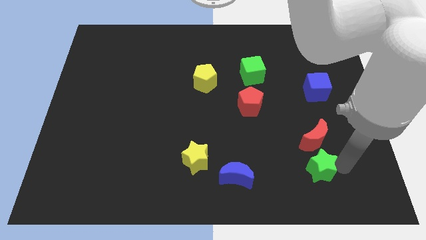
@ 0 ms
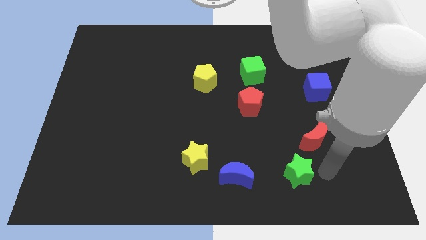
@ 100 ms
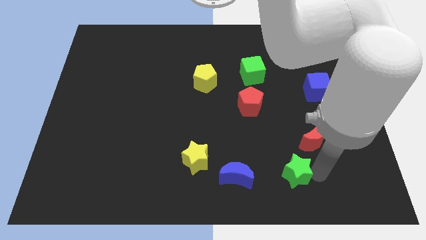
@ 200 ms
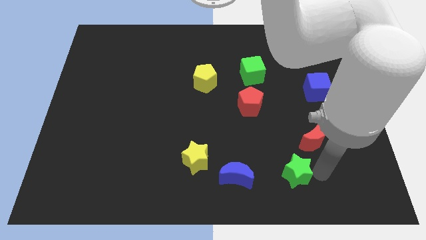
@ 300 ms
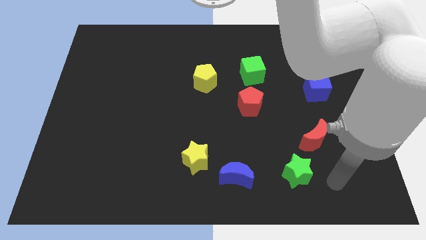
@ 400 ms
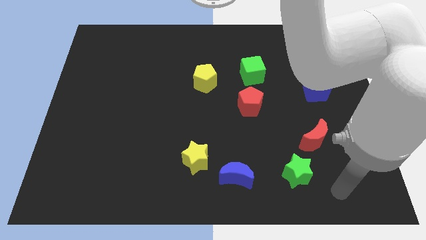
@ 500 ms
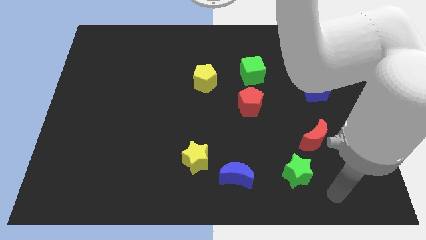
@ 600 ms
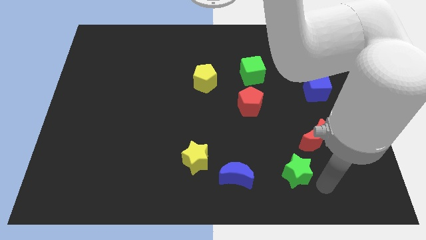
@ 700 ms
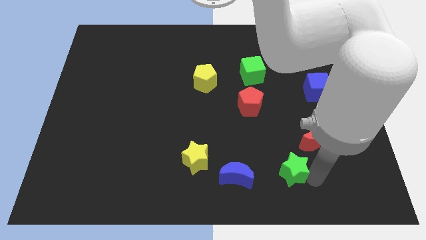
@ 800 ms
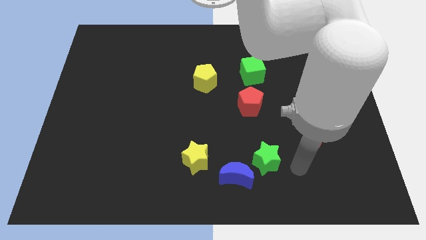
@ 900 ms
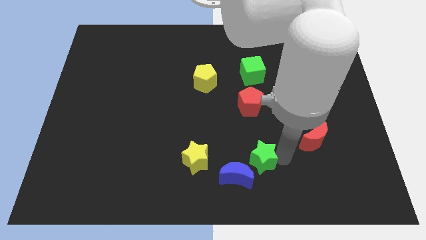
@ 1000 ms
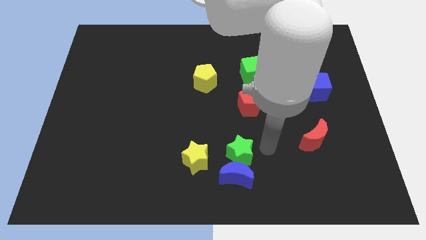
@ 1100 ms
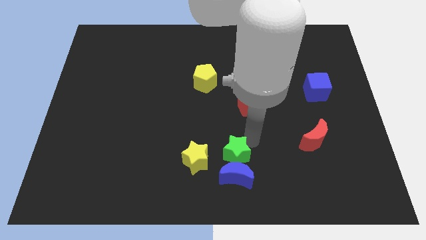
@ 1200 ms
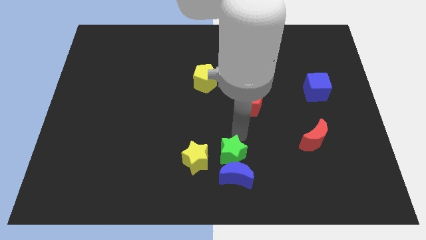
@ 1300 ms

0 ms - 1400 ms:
place the green star above the blue crescent

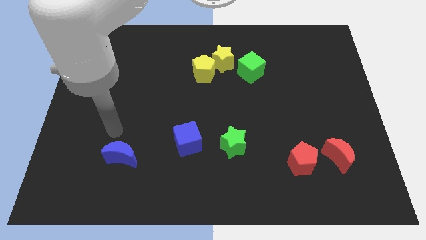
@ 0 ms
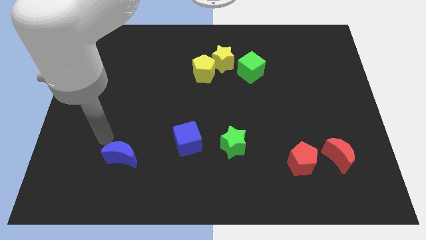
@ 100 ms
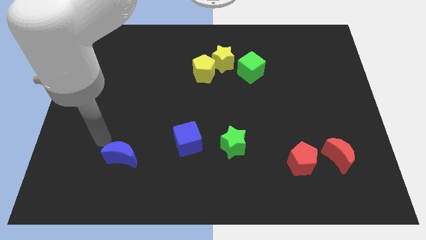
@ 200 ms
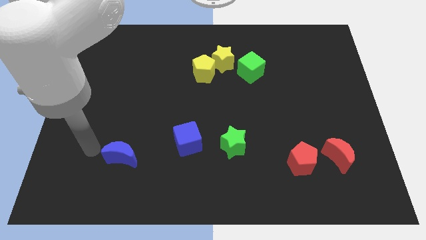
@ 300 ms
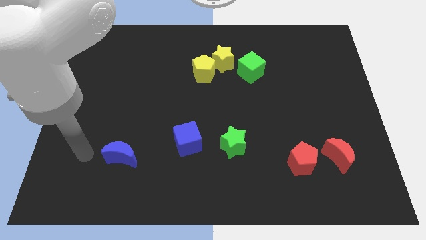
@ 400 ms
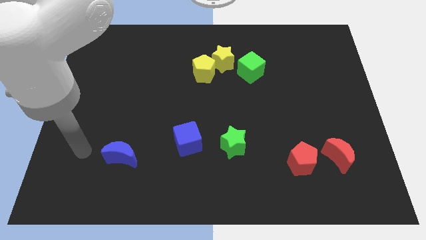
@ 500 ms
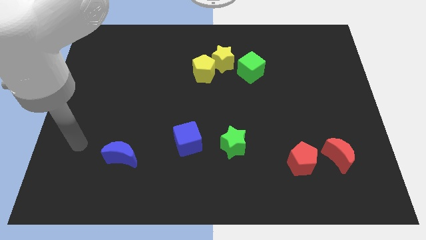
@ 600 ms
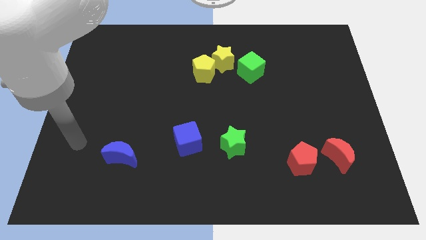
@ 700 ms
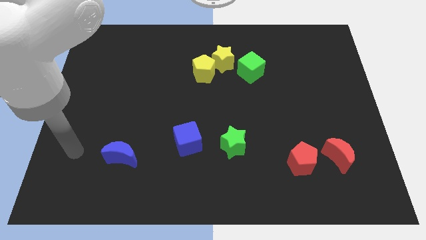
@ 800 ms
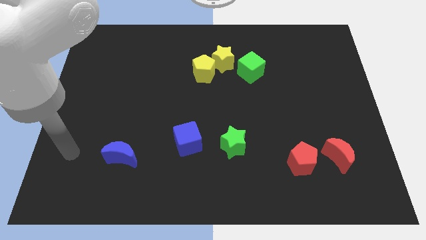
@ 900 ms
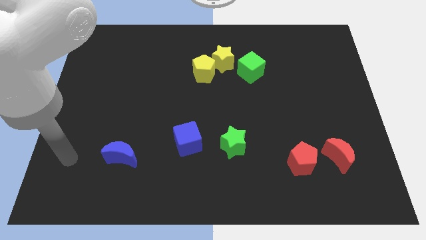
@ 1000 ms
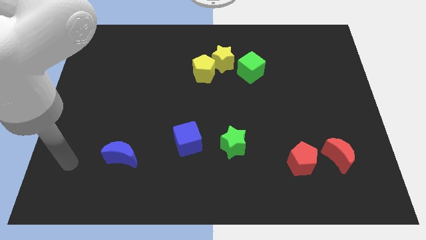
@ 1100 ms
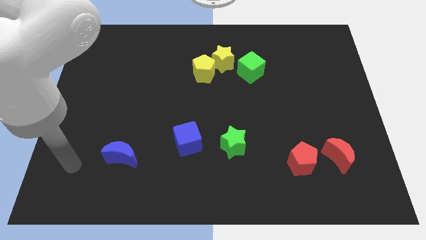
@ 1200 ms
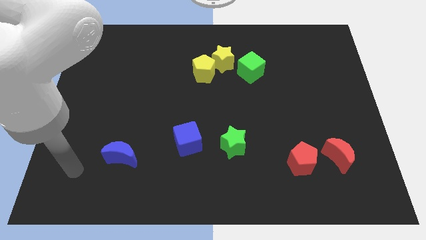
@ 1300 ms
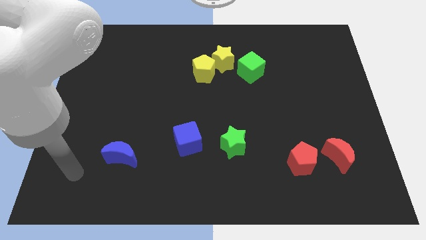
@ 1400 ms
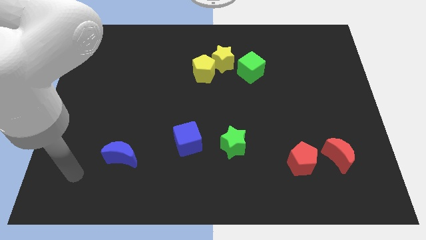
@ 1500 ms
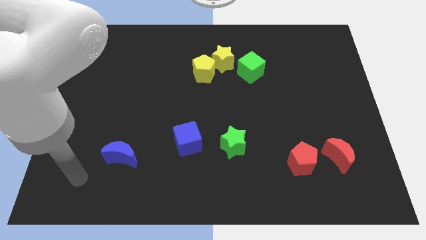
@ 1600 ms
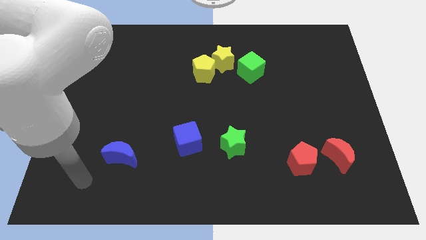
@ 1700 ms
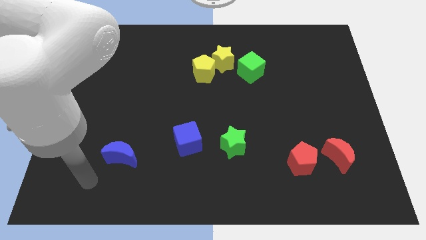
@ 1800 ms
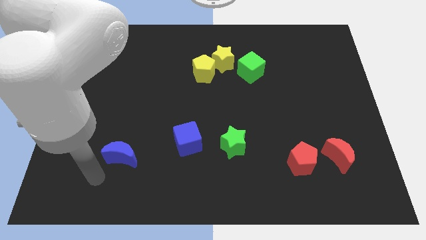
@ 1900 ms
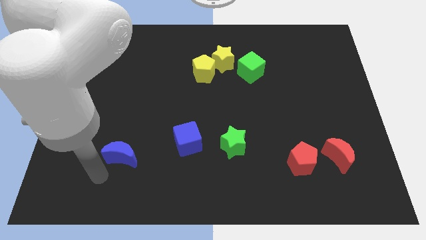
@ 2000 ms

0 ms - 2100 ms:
move your arm to the bottom of the blue crescent

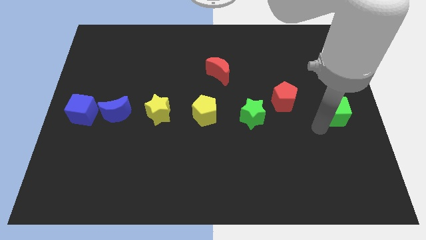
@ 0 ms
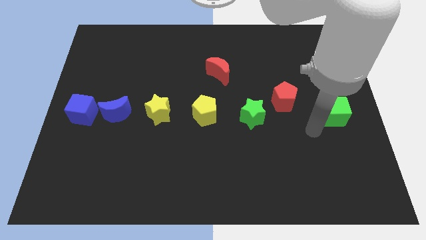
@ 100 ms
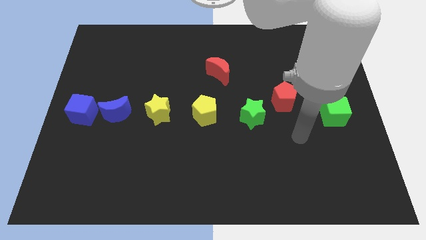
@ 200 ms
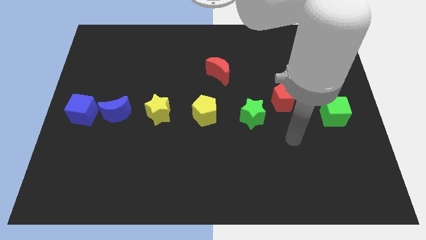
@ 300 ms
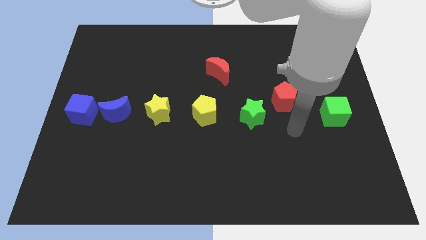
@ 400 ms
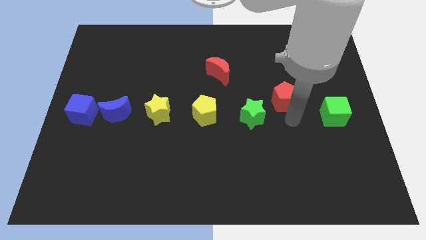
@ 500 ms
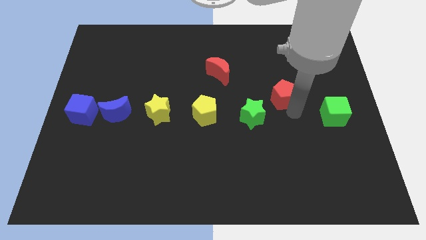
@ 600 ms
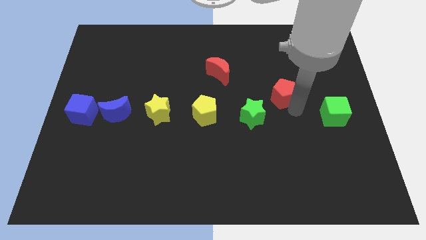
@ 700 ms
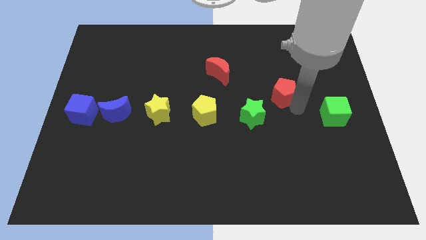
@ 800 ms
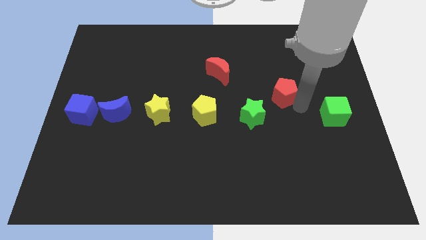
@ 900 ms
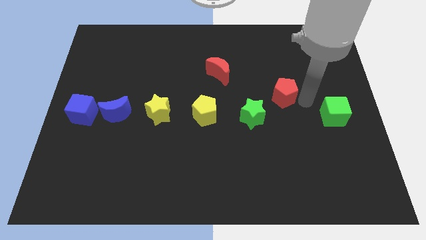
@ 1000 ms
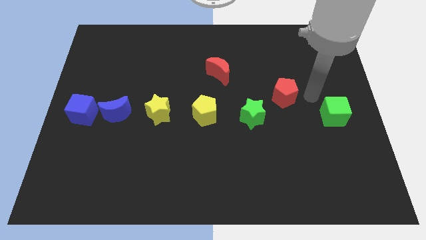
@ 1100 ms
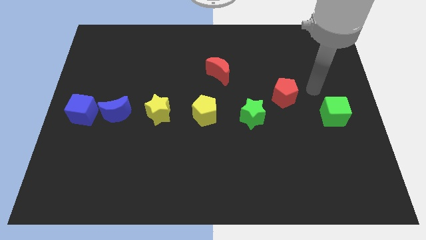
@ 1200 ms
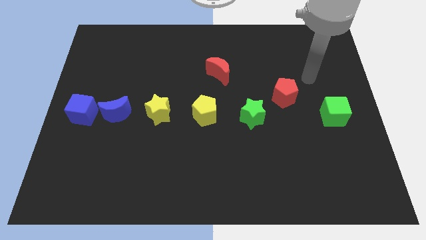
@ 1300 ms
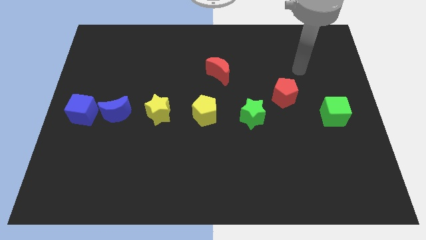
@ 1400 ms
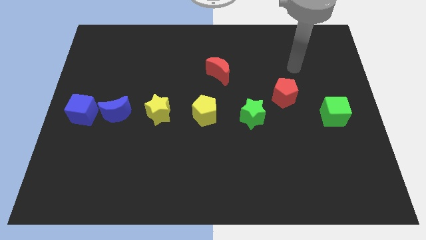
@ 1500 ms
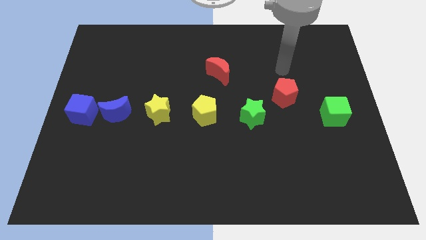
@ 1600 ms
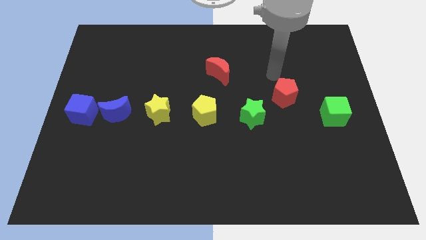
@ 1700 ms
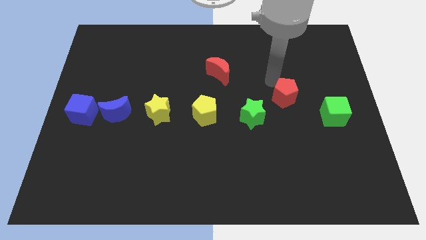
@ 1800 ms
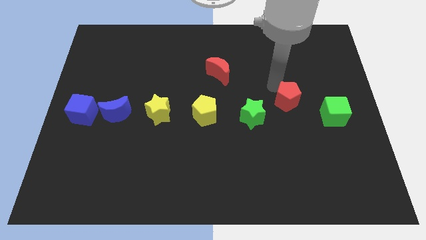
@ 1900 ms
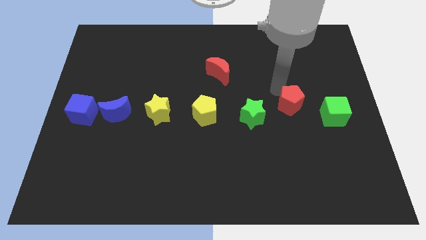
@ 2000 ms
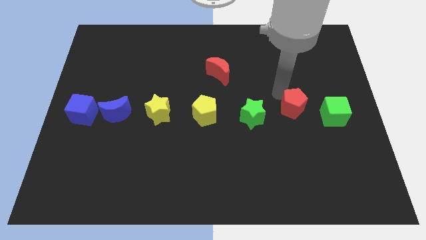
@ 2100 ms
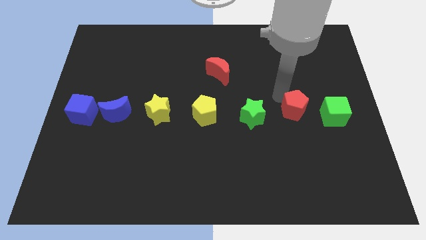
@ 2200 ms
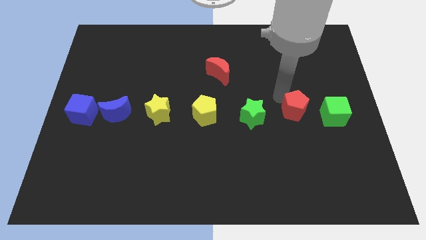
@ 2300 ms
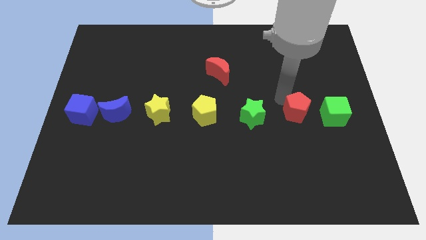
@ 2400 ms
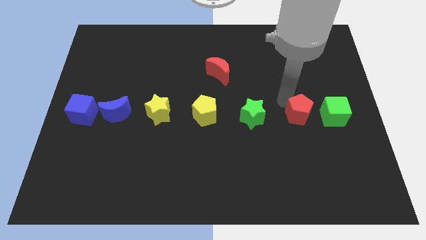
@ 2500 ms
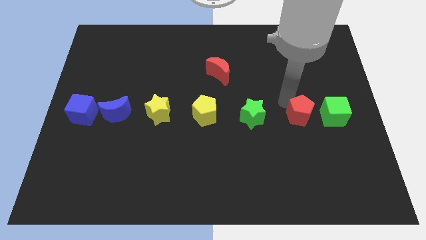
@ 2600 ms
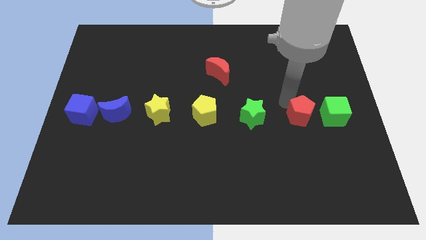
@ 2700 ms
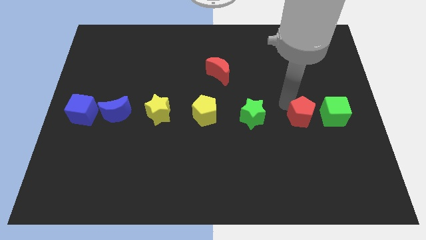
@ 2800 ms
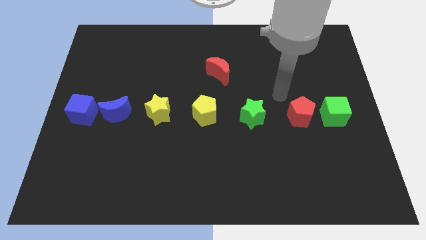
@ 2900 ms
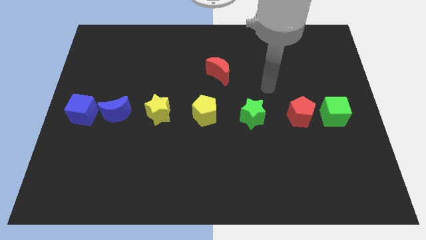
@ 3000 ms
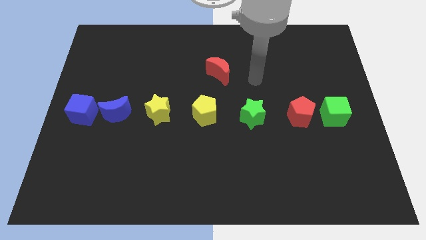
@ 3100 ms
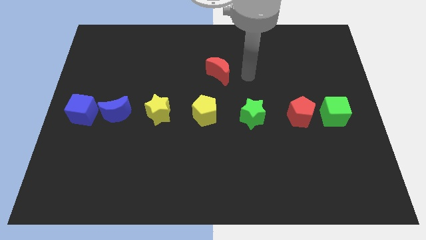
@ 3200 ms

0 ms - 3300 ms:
move the red pentagon in between the green star and green cube

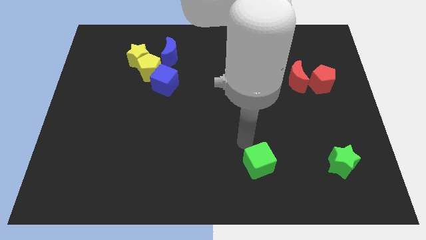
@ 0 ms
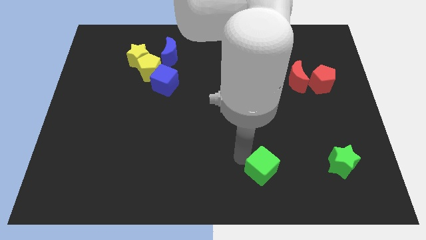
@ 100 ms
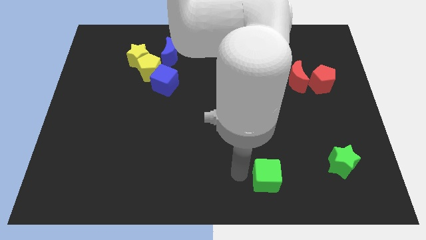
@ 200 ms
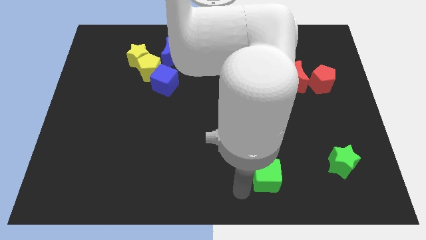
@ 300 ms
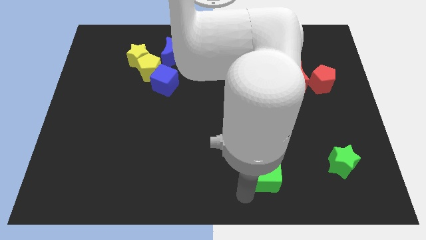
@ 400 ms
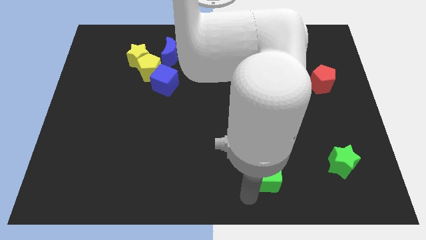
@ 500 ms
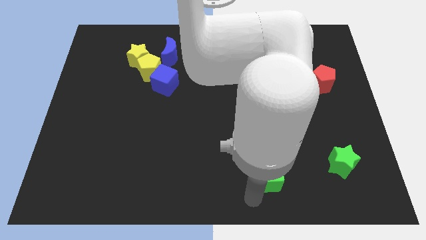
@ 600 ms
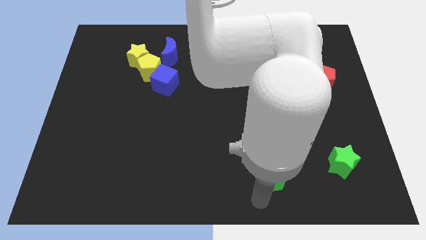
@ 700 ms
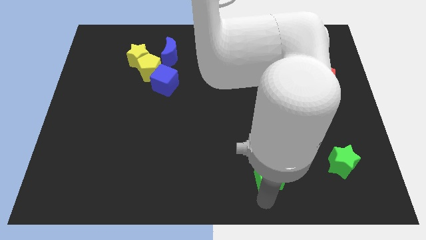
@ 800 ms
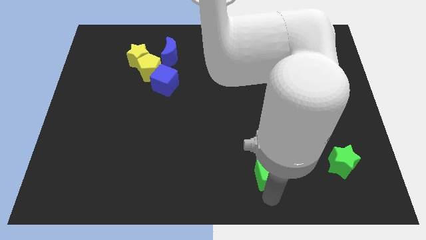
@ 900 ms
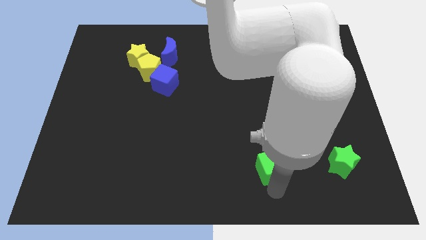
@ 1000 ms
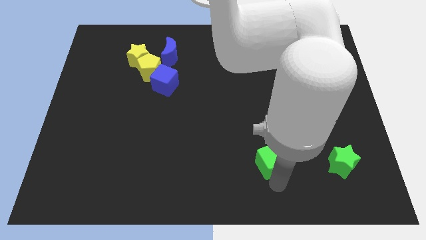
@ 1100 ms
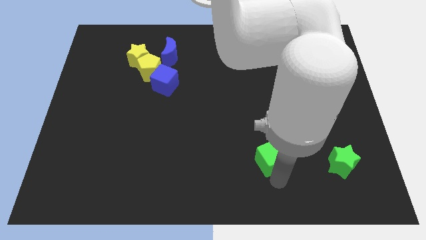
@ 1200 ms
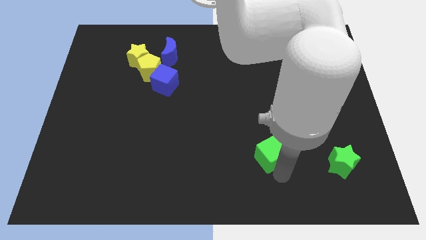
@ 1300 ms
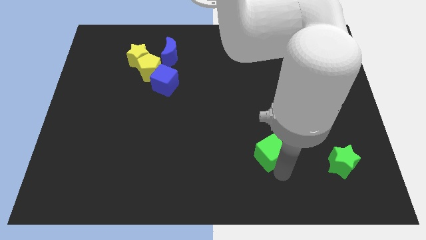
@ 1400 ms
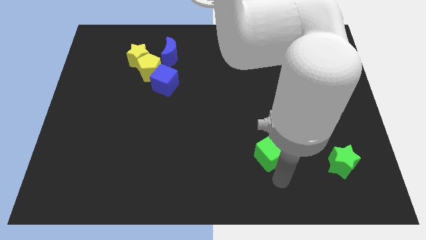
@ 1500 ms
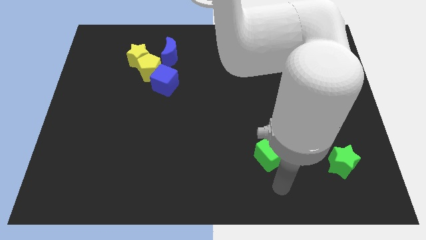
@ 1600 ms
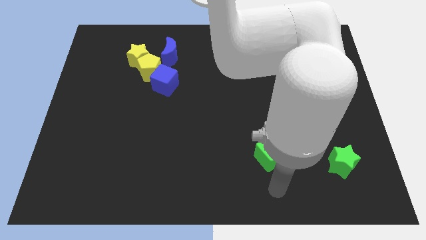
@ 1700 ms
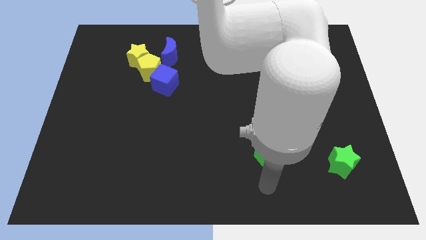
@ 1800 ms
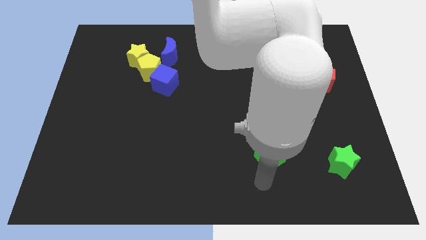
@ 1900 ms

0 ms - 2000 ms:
drag the green cube slightly up
